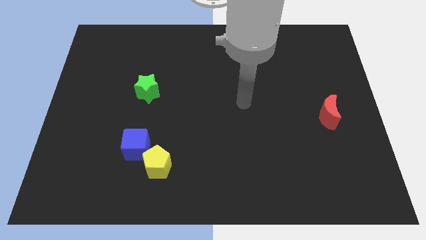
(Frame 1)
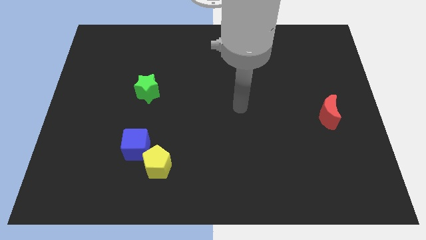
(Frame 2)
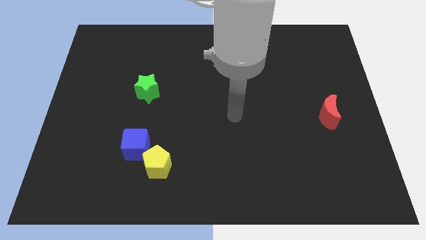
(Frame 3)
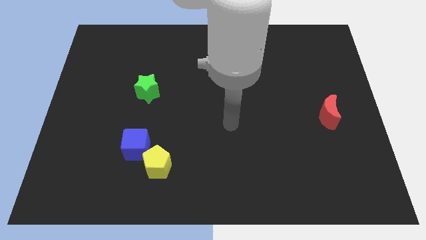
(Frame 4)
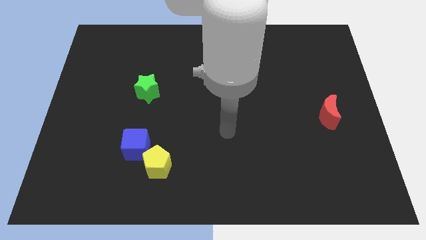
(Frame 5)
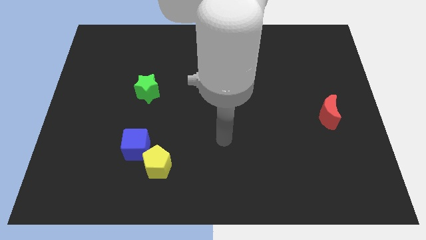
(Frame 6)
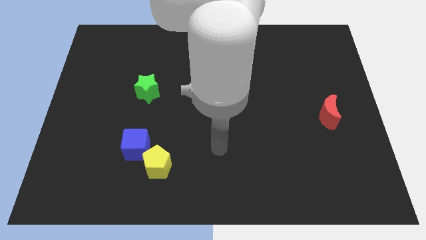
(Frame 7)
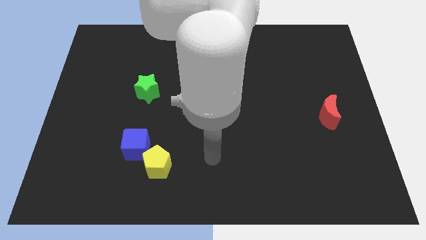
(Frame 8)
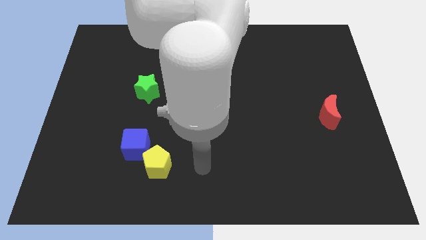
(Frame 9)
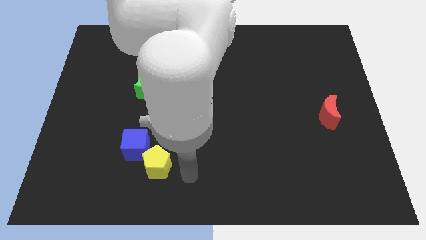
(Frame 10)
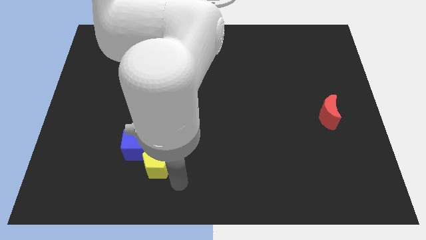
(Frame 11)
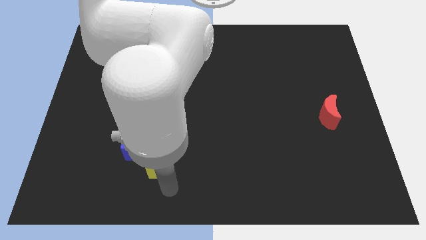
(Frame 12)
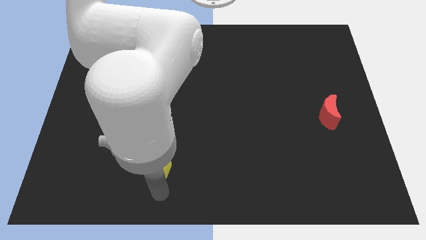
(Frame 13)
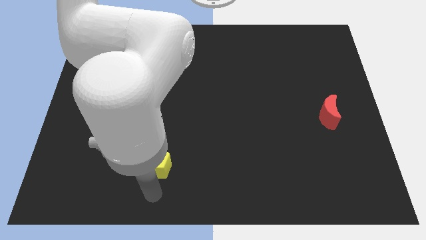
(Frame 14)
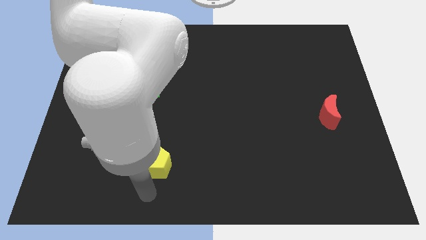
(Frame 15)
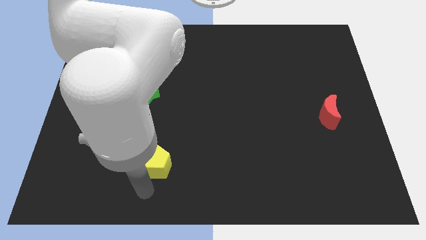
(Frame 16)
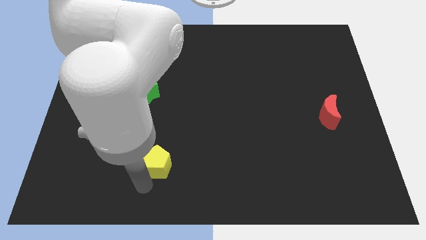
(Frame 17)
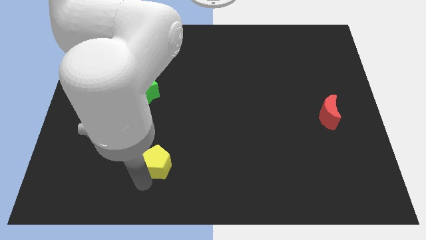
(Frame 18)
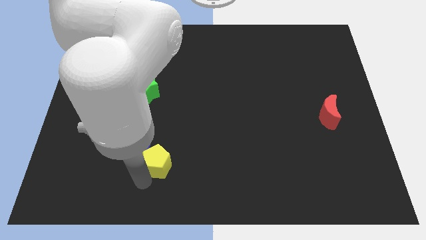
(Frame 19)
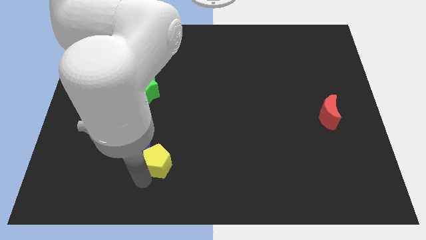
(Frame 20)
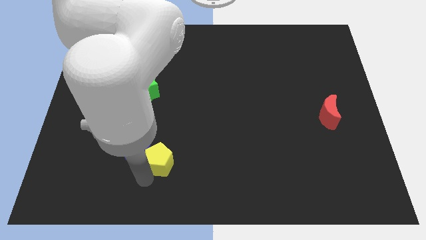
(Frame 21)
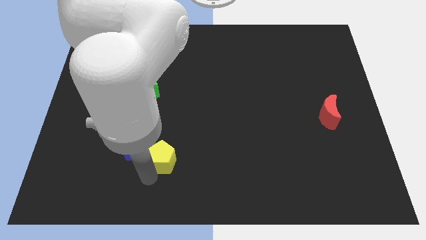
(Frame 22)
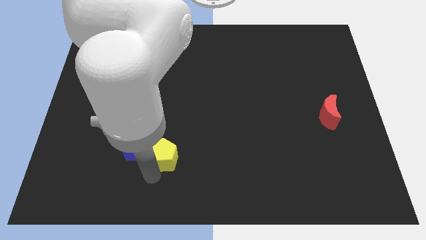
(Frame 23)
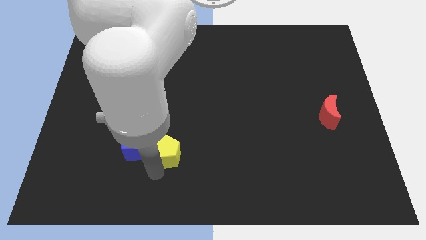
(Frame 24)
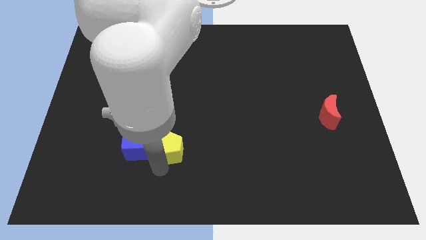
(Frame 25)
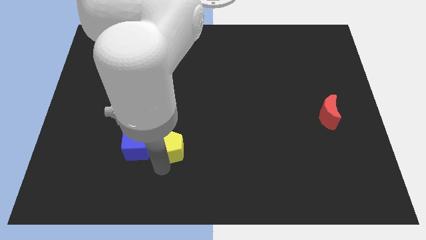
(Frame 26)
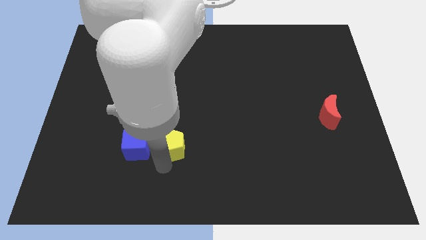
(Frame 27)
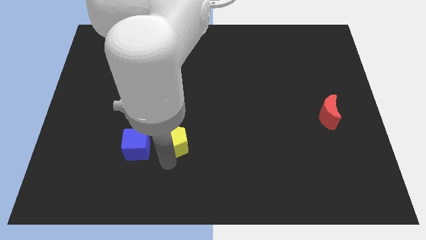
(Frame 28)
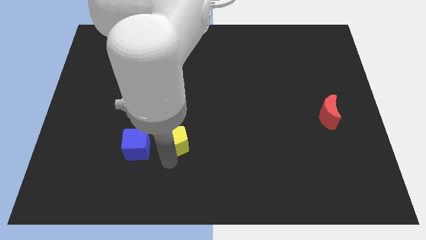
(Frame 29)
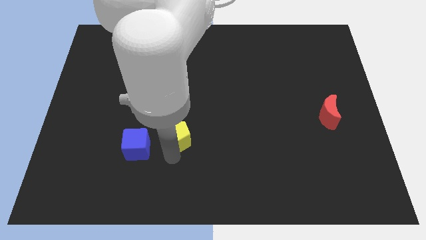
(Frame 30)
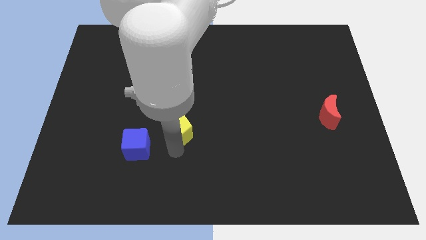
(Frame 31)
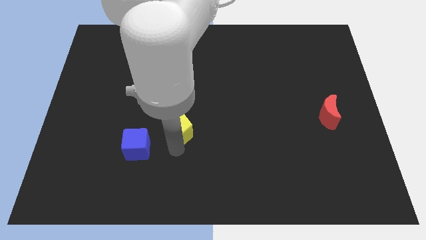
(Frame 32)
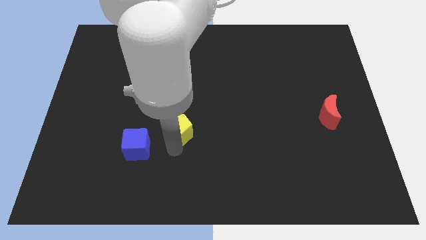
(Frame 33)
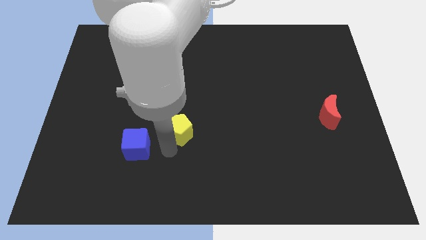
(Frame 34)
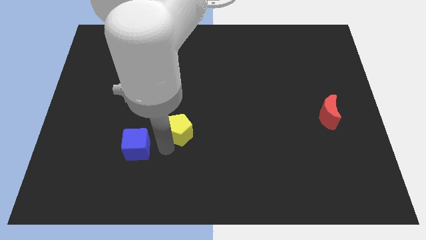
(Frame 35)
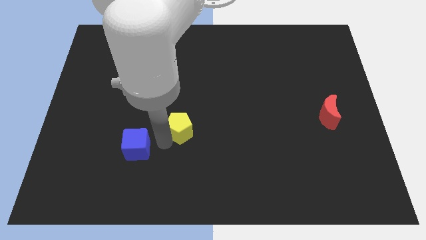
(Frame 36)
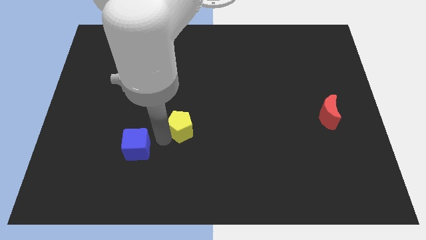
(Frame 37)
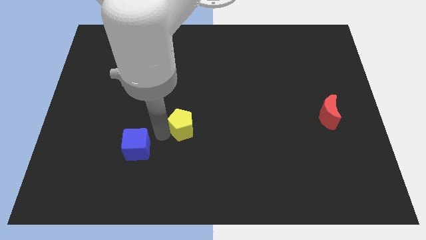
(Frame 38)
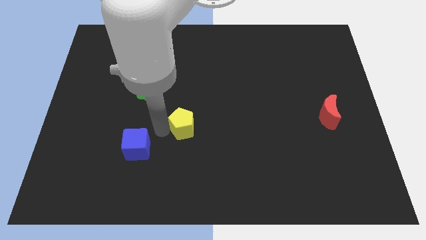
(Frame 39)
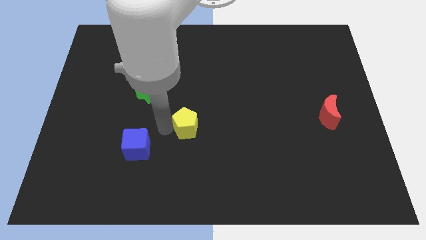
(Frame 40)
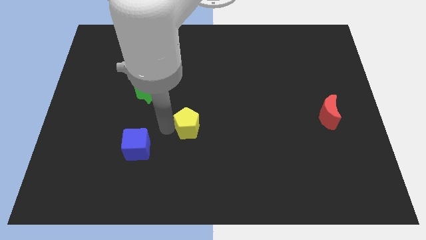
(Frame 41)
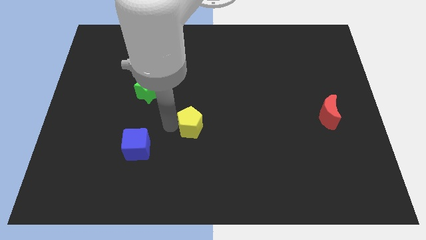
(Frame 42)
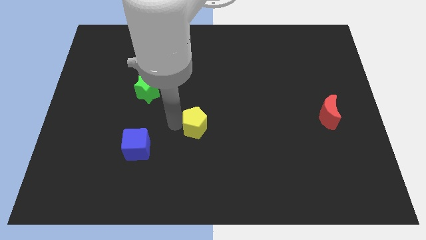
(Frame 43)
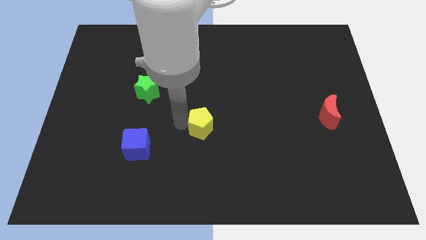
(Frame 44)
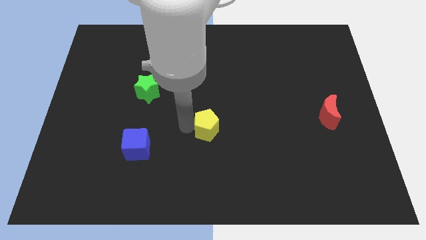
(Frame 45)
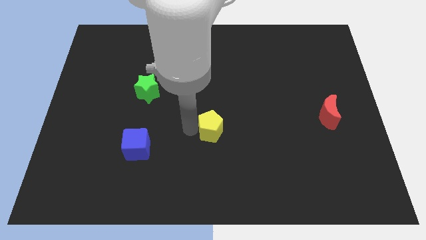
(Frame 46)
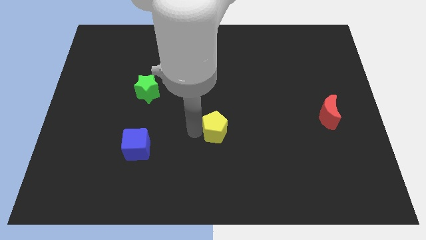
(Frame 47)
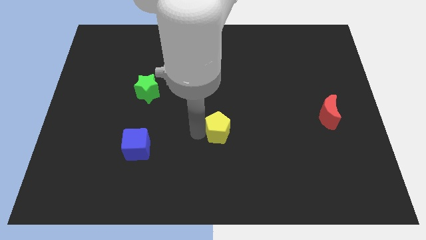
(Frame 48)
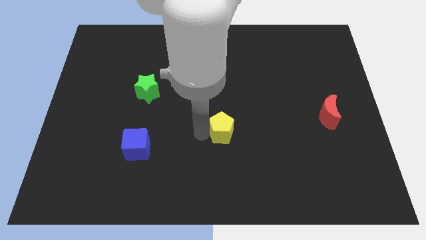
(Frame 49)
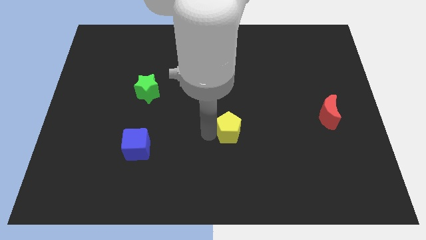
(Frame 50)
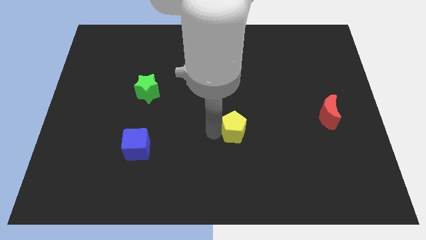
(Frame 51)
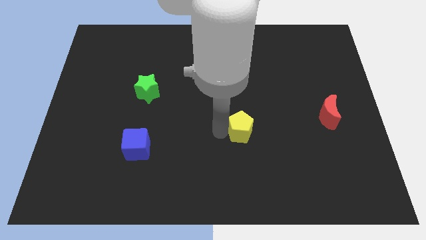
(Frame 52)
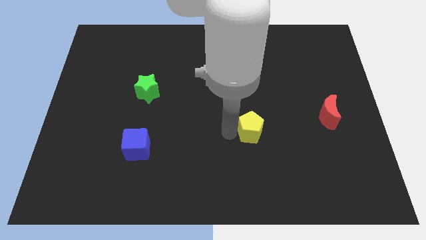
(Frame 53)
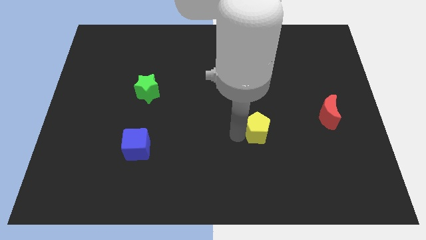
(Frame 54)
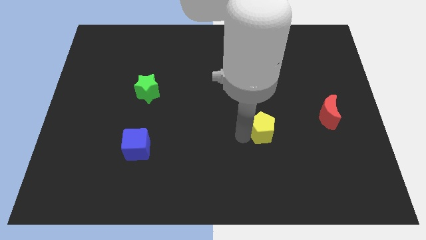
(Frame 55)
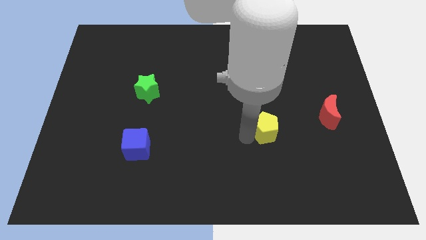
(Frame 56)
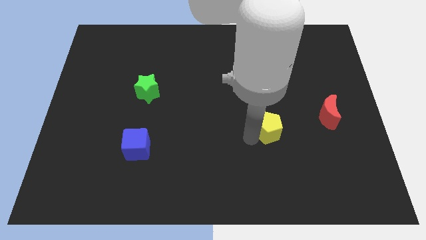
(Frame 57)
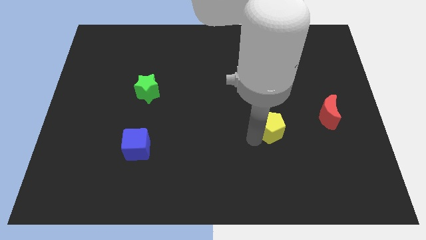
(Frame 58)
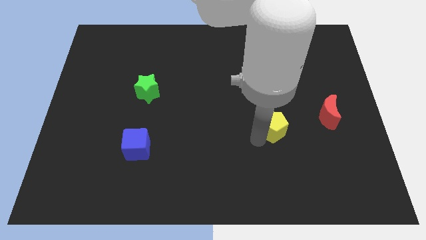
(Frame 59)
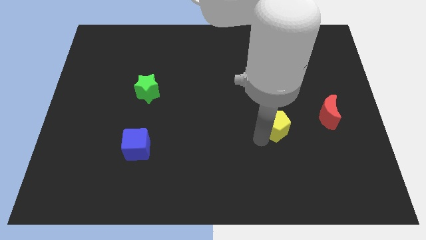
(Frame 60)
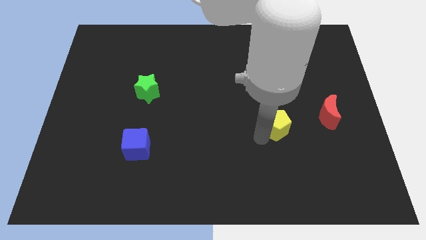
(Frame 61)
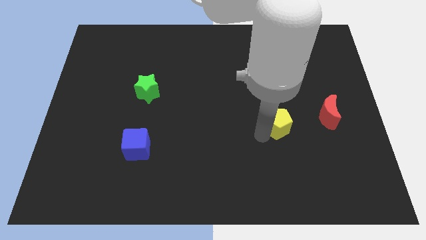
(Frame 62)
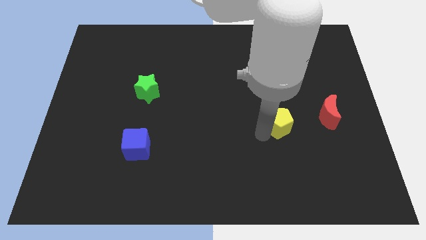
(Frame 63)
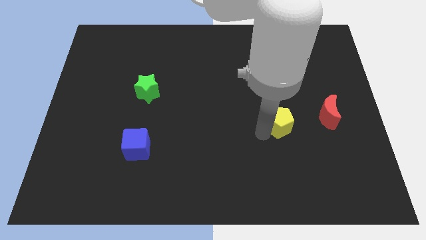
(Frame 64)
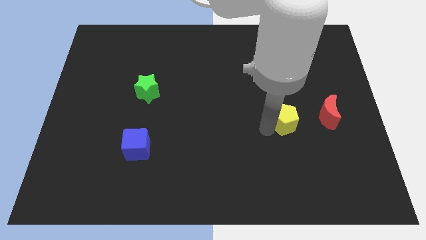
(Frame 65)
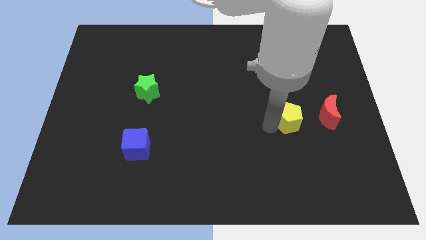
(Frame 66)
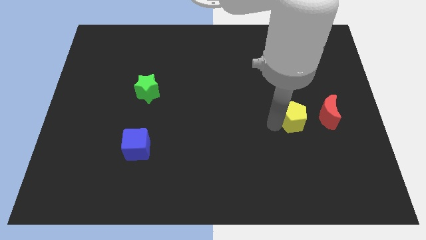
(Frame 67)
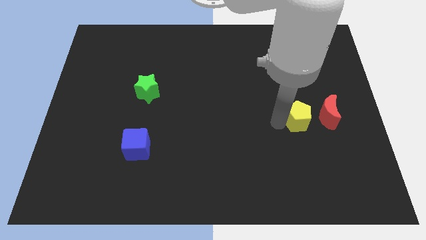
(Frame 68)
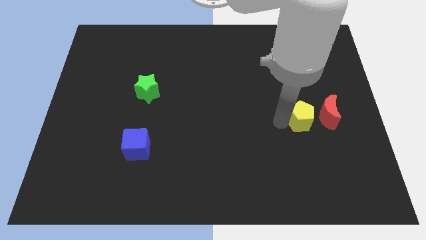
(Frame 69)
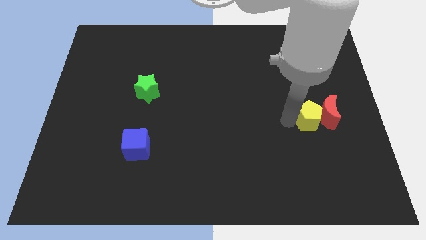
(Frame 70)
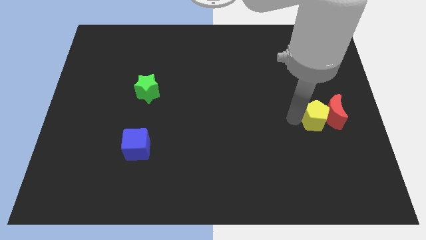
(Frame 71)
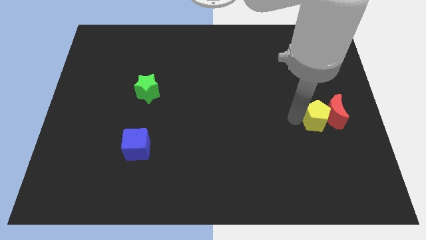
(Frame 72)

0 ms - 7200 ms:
put the yellow pentagon to the red moon

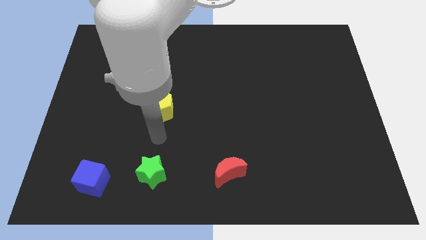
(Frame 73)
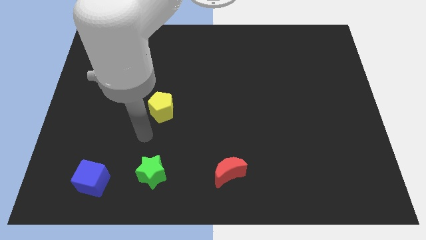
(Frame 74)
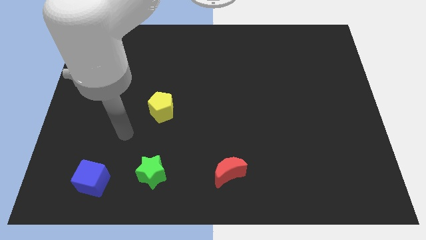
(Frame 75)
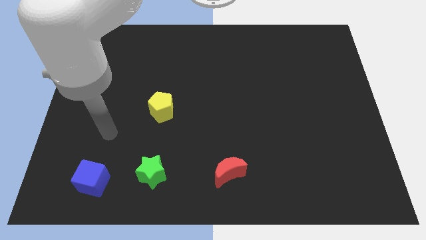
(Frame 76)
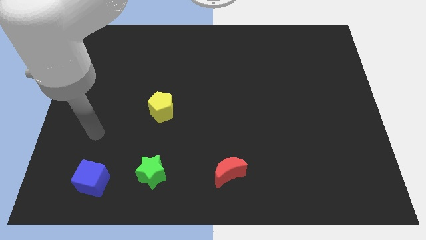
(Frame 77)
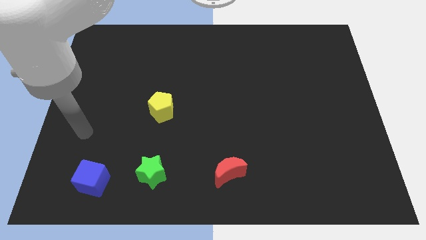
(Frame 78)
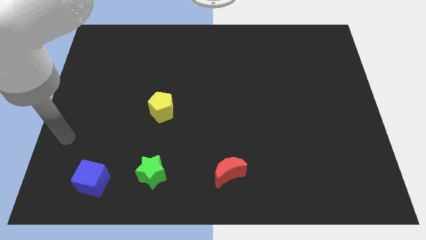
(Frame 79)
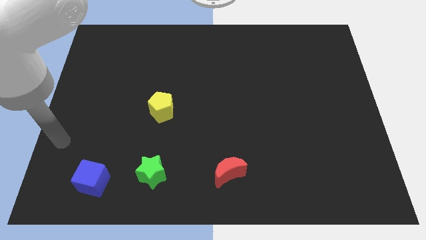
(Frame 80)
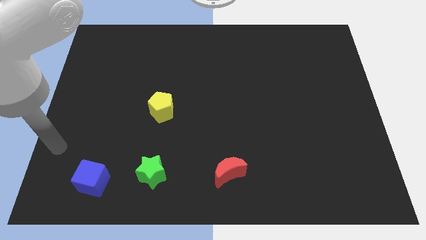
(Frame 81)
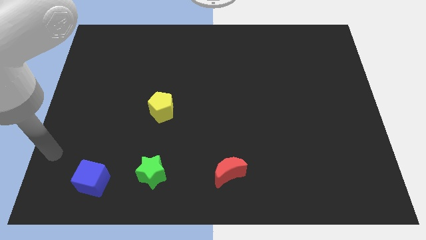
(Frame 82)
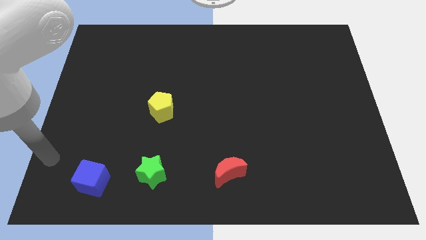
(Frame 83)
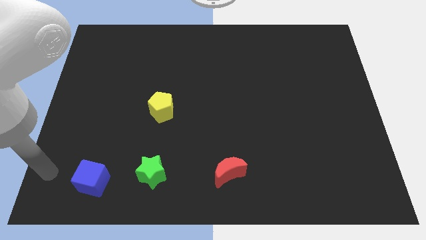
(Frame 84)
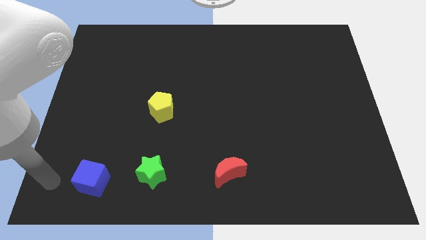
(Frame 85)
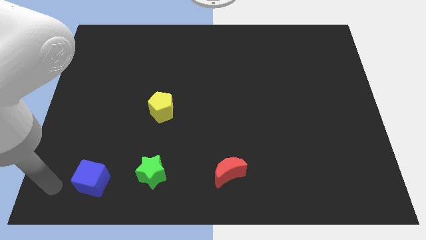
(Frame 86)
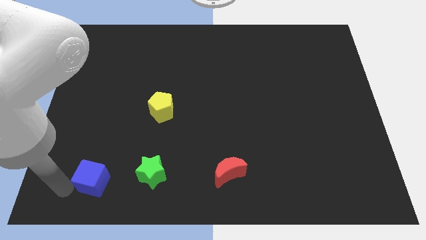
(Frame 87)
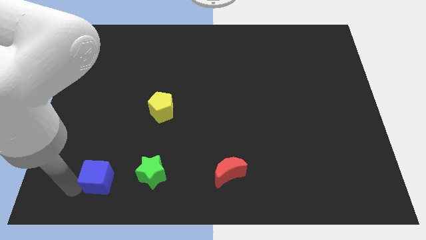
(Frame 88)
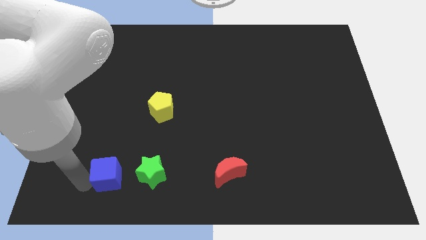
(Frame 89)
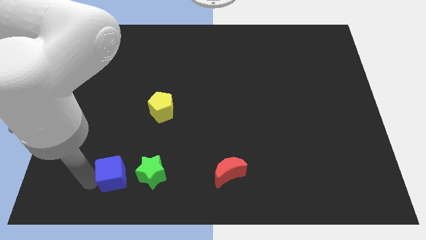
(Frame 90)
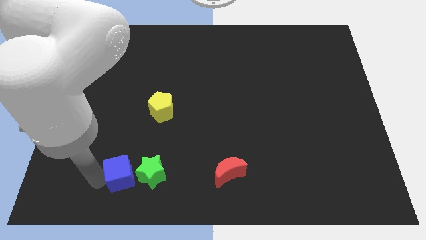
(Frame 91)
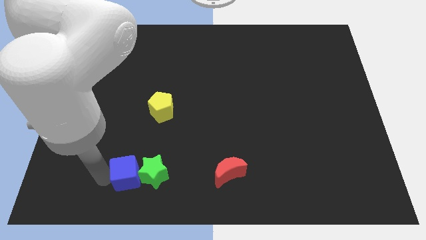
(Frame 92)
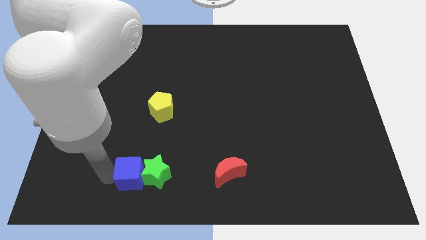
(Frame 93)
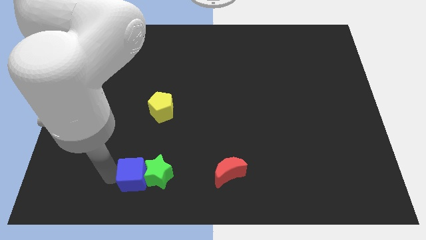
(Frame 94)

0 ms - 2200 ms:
move the blue cube towards the green block
